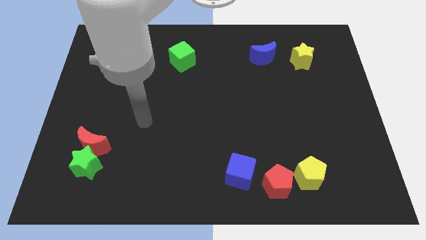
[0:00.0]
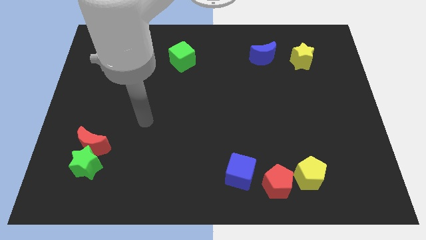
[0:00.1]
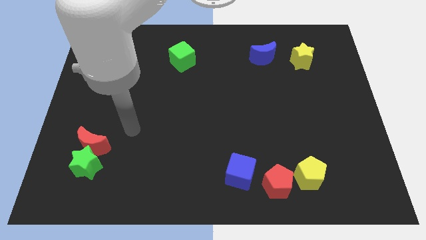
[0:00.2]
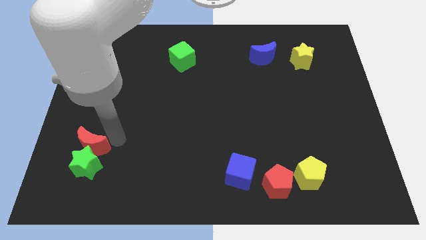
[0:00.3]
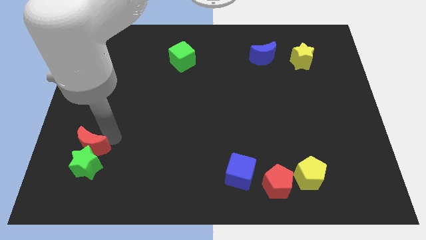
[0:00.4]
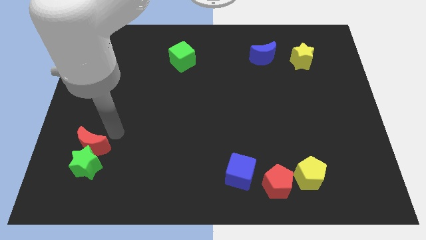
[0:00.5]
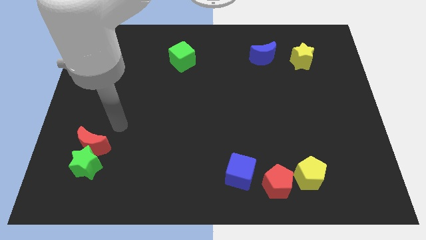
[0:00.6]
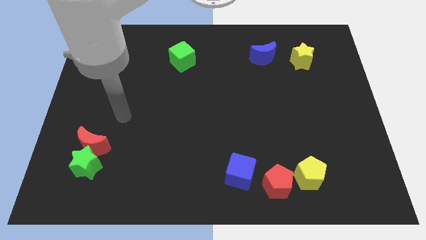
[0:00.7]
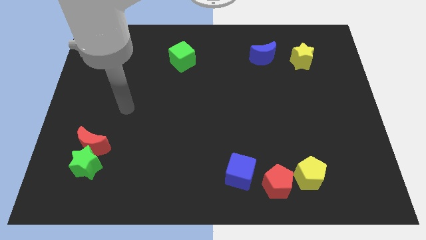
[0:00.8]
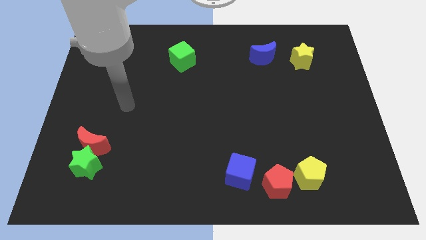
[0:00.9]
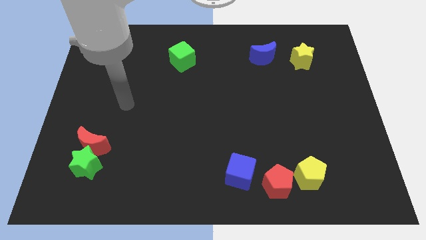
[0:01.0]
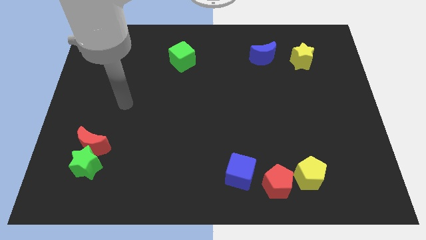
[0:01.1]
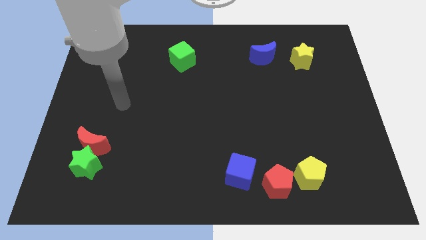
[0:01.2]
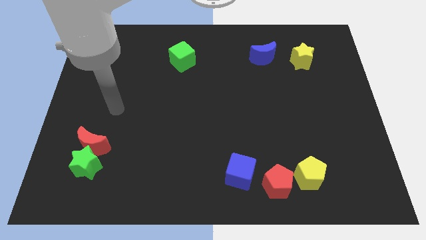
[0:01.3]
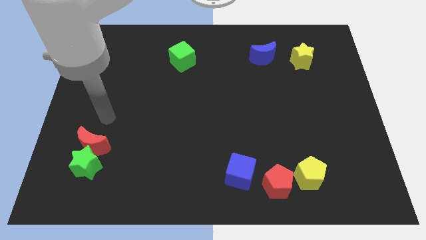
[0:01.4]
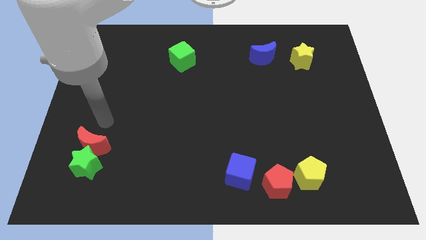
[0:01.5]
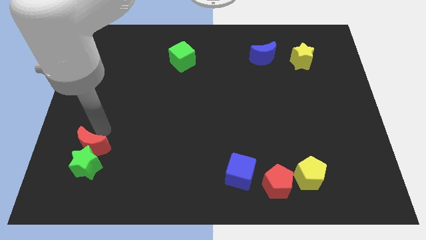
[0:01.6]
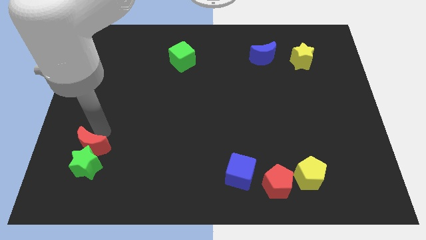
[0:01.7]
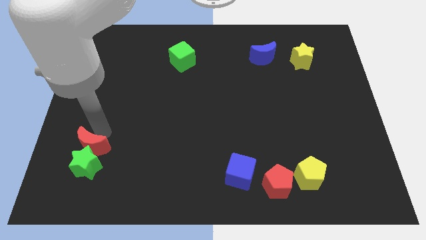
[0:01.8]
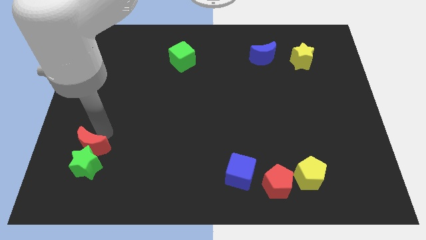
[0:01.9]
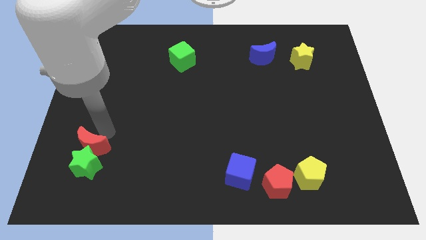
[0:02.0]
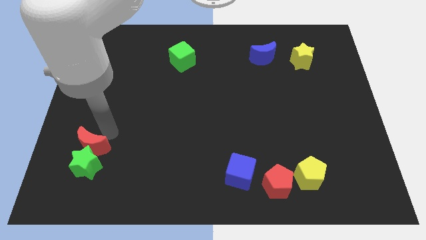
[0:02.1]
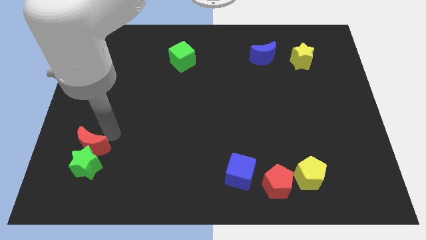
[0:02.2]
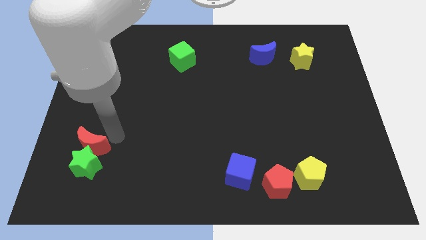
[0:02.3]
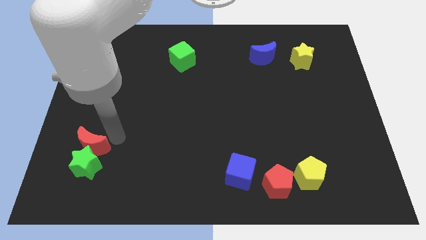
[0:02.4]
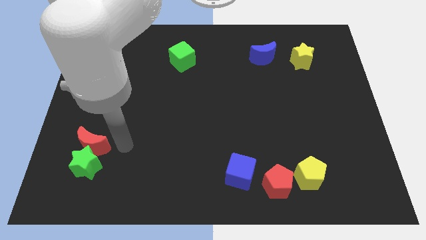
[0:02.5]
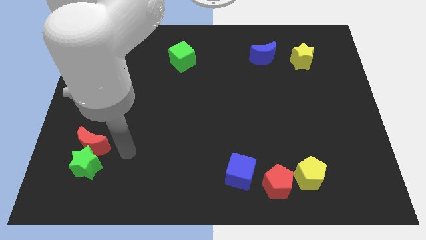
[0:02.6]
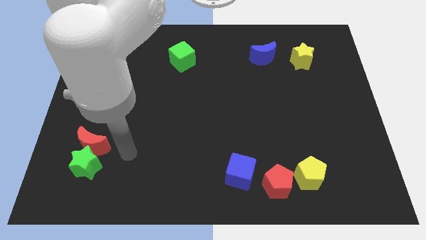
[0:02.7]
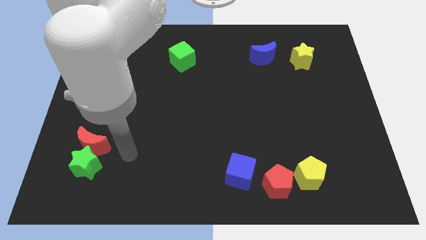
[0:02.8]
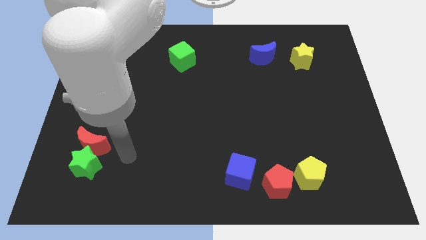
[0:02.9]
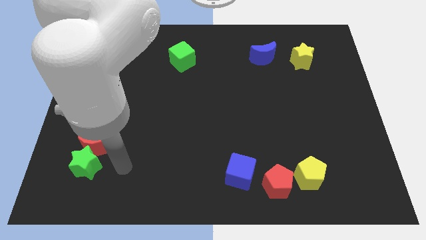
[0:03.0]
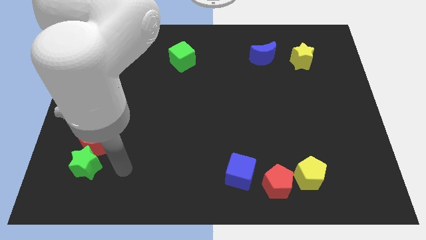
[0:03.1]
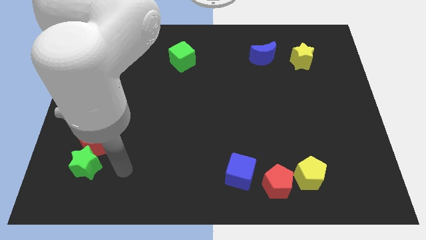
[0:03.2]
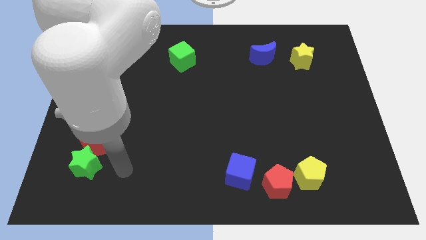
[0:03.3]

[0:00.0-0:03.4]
point your hand at the right side of the green star

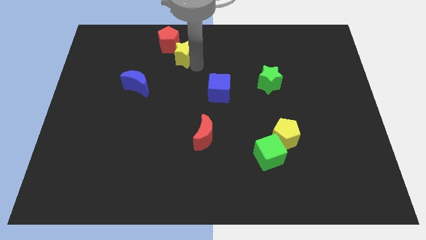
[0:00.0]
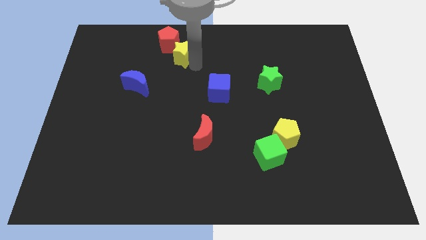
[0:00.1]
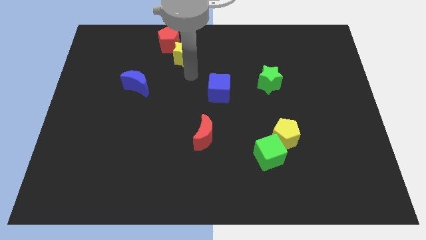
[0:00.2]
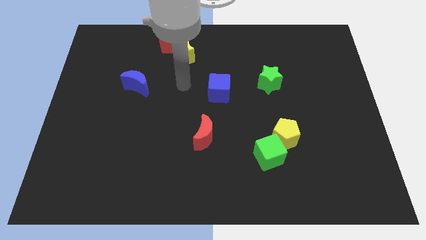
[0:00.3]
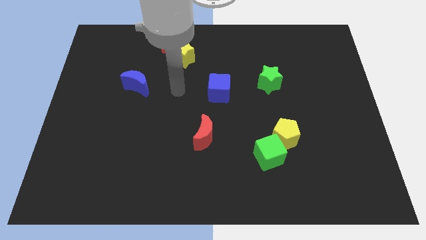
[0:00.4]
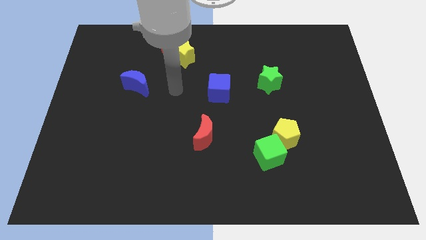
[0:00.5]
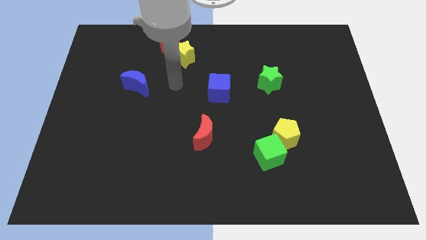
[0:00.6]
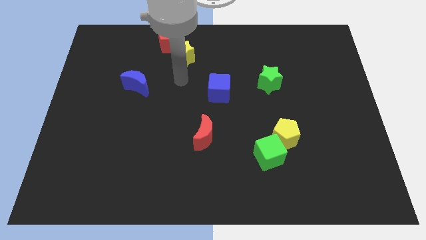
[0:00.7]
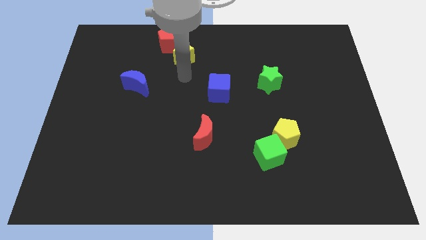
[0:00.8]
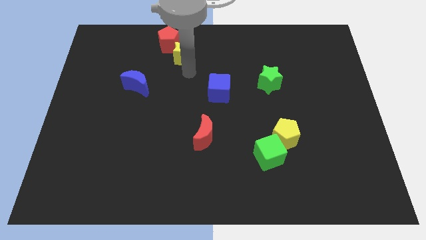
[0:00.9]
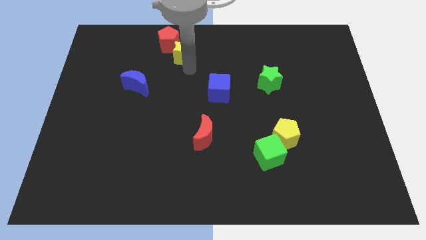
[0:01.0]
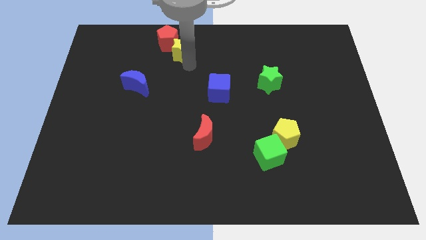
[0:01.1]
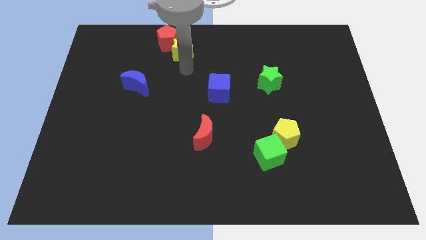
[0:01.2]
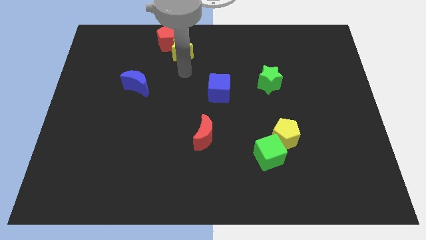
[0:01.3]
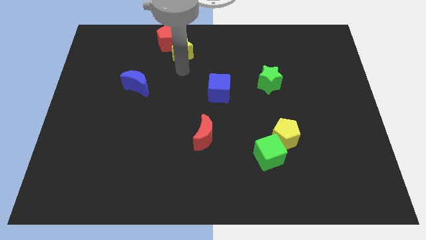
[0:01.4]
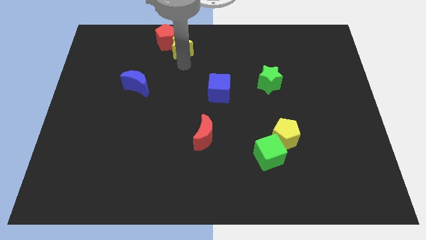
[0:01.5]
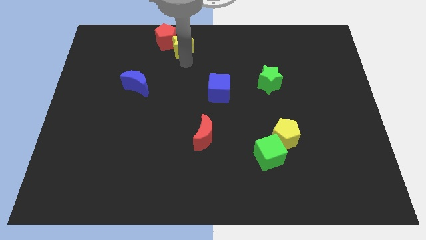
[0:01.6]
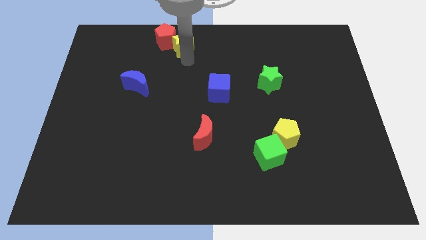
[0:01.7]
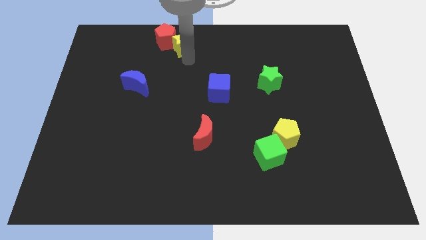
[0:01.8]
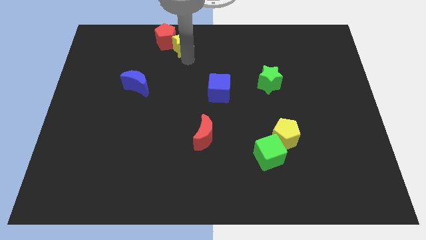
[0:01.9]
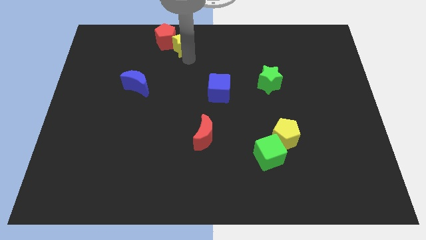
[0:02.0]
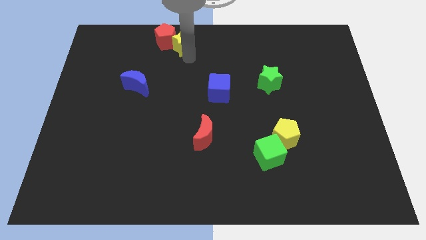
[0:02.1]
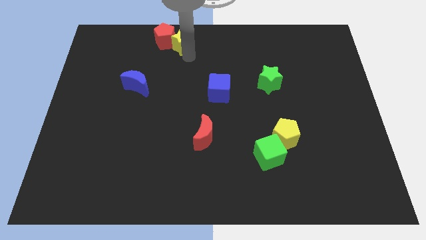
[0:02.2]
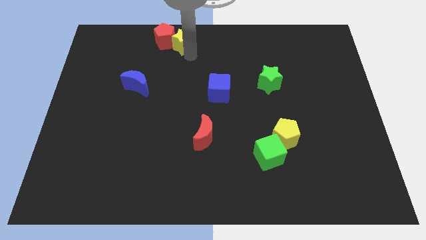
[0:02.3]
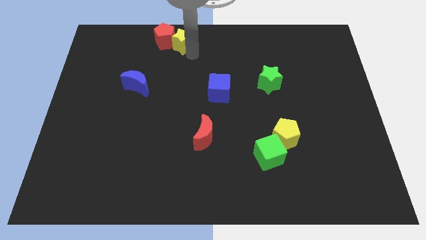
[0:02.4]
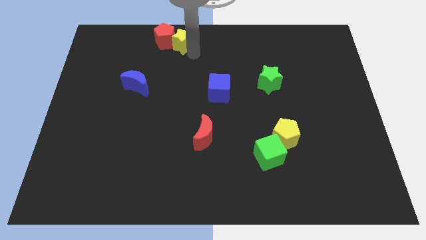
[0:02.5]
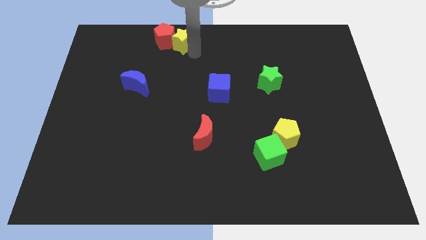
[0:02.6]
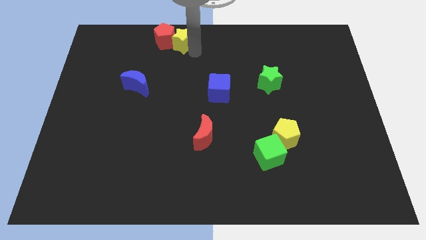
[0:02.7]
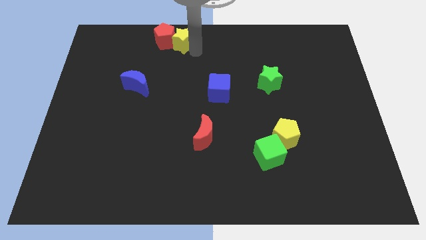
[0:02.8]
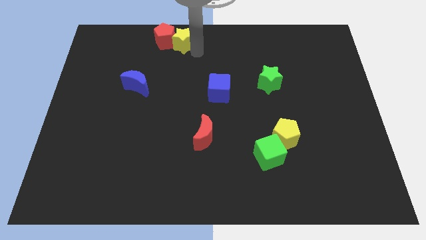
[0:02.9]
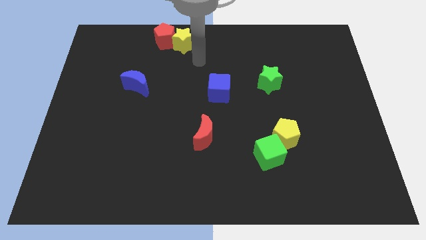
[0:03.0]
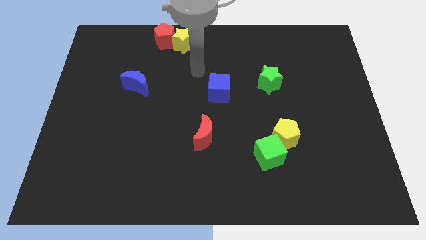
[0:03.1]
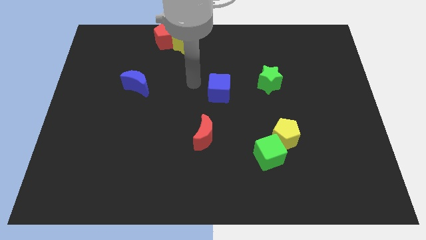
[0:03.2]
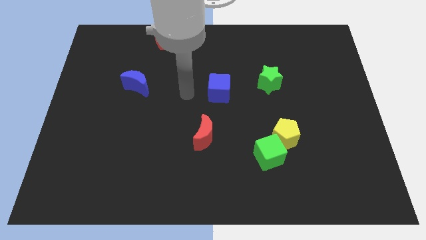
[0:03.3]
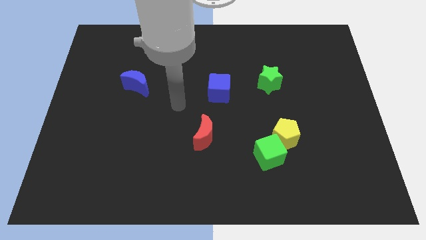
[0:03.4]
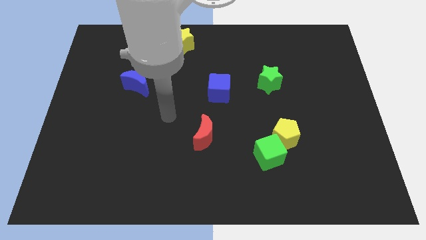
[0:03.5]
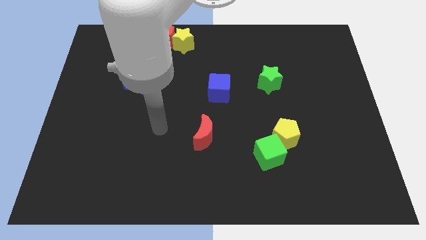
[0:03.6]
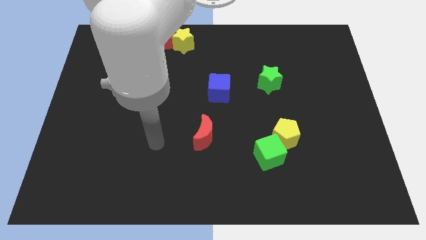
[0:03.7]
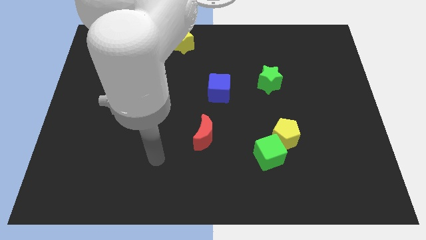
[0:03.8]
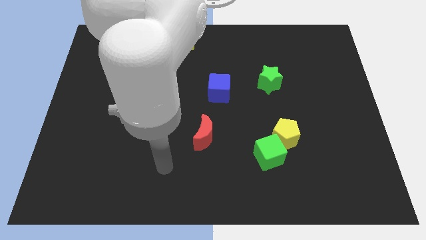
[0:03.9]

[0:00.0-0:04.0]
move your arm away from the yellow star

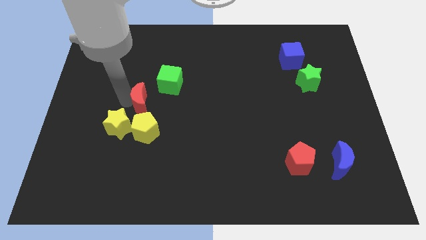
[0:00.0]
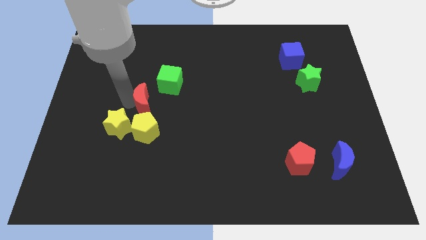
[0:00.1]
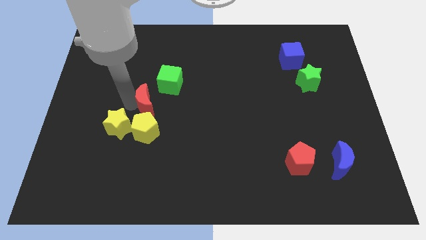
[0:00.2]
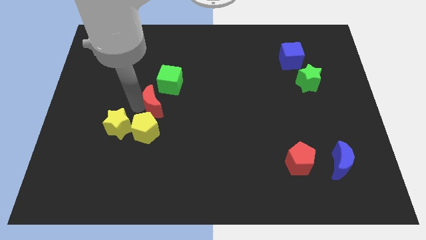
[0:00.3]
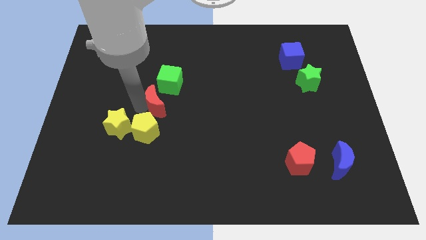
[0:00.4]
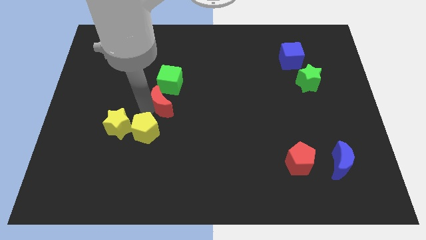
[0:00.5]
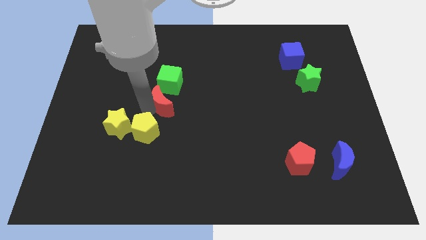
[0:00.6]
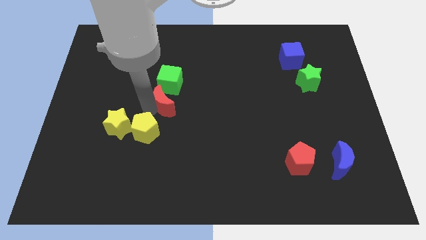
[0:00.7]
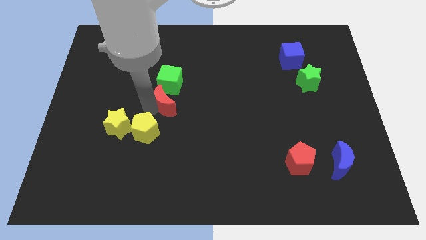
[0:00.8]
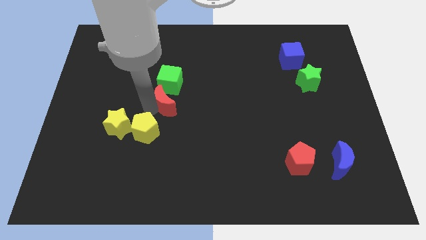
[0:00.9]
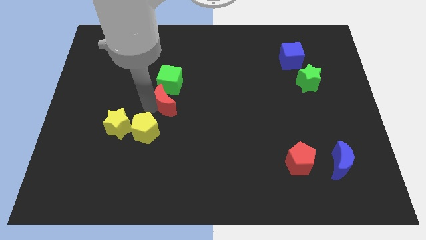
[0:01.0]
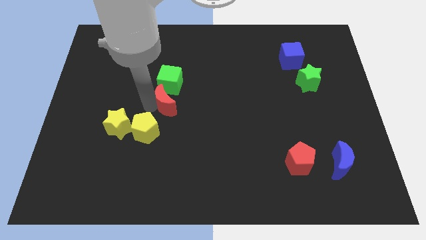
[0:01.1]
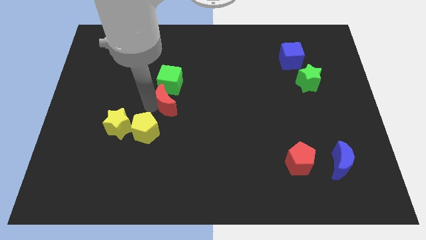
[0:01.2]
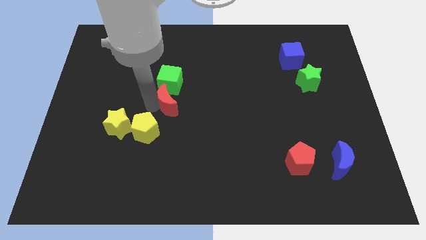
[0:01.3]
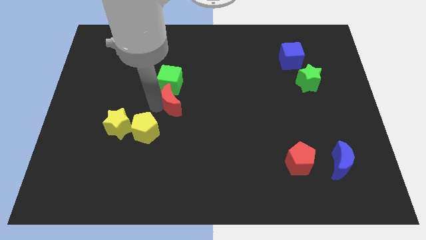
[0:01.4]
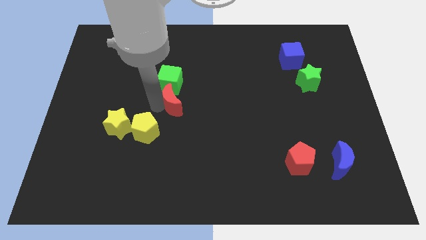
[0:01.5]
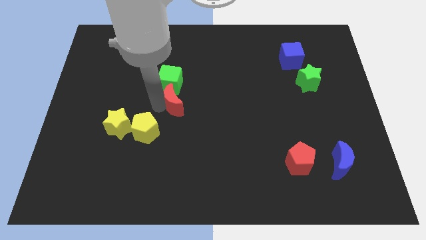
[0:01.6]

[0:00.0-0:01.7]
move the red crescent to the bottom of the green cube
